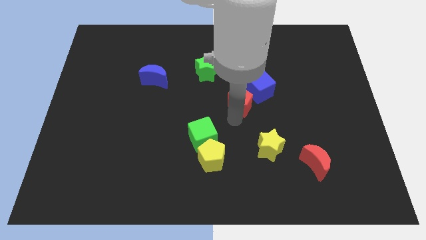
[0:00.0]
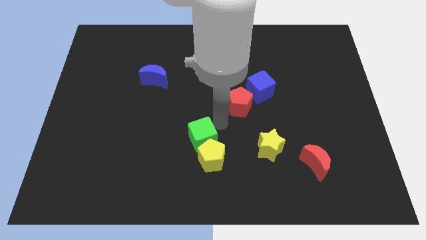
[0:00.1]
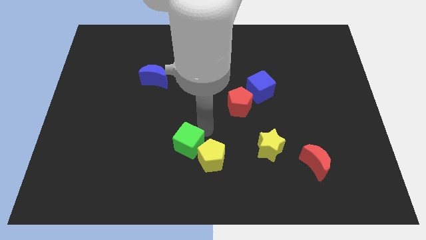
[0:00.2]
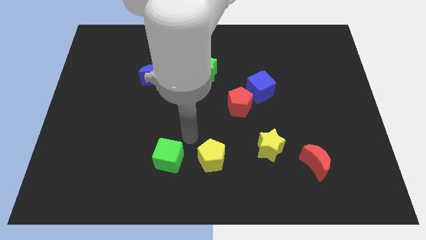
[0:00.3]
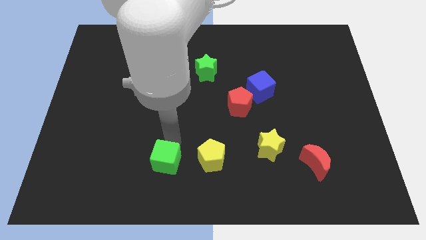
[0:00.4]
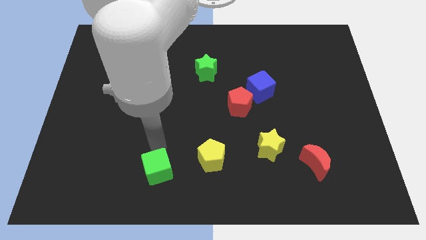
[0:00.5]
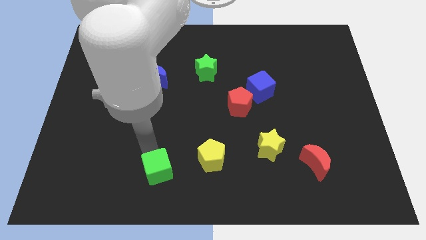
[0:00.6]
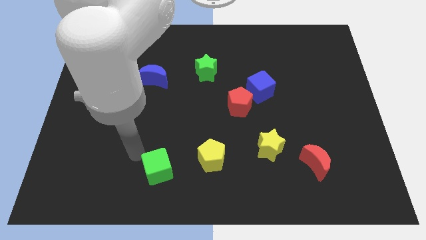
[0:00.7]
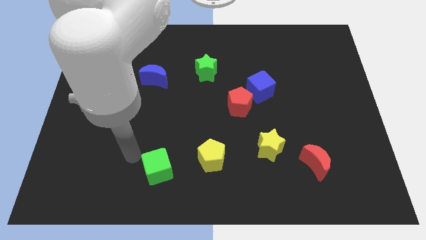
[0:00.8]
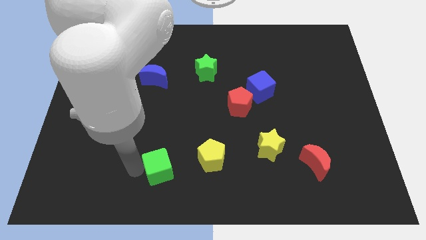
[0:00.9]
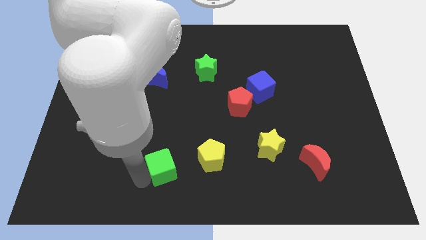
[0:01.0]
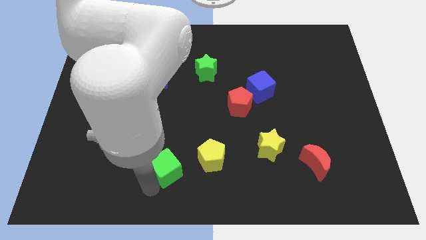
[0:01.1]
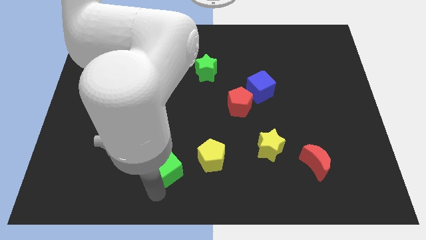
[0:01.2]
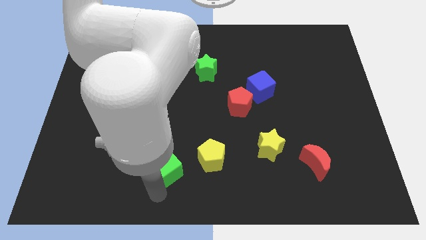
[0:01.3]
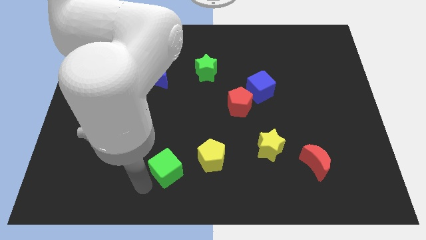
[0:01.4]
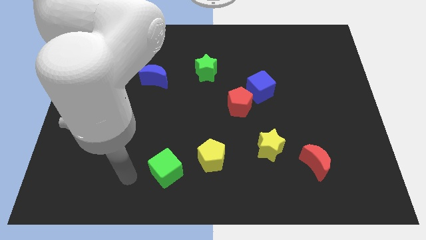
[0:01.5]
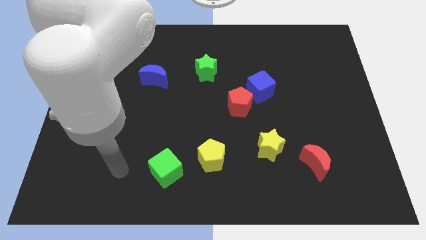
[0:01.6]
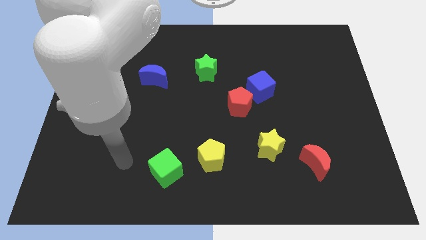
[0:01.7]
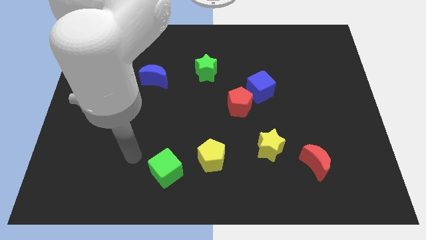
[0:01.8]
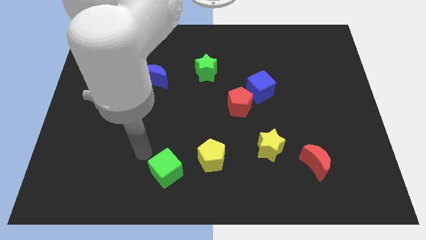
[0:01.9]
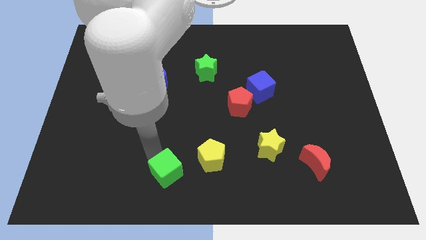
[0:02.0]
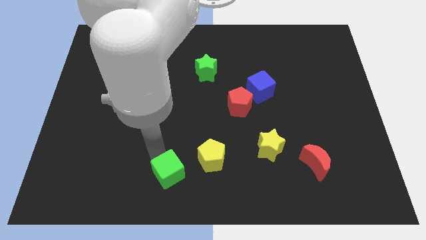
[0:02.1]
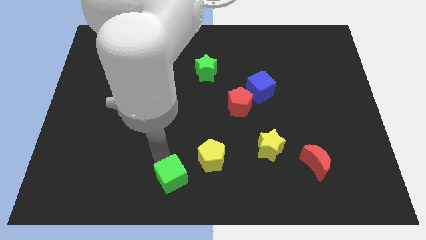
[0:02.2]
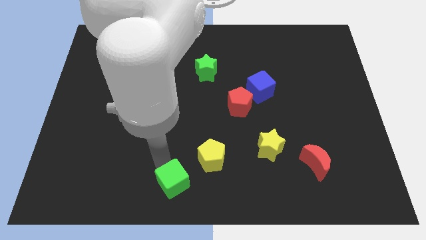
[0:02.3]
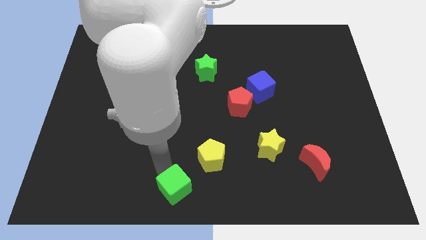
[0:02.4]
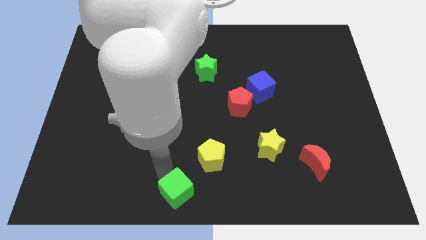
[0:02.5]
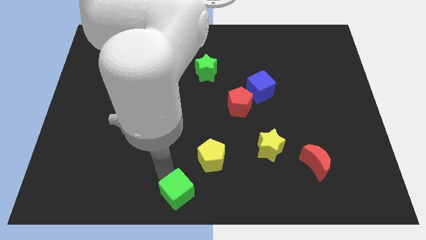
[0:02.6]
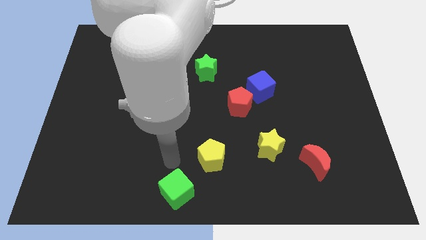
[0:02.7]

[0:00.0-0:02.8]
push the green cube to the bottom center

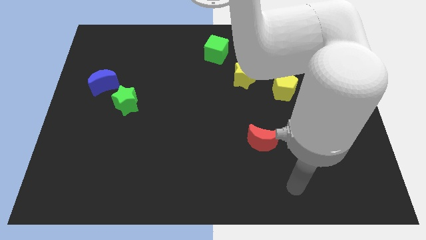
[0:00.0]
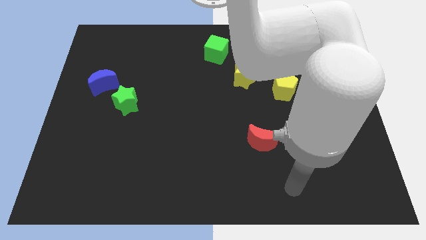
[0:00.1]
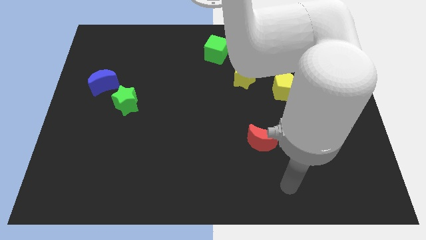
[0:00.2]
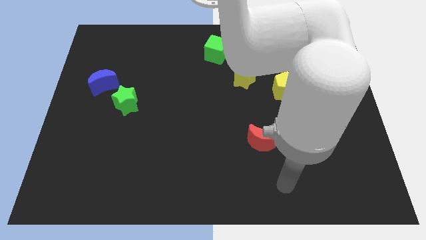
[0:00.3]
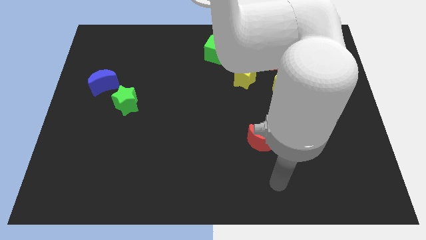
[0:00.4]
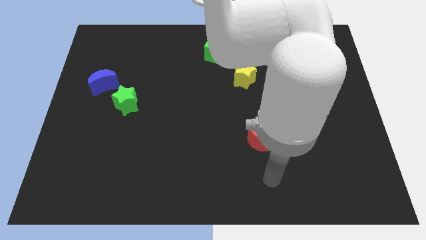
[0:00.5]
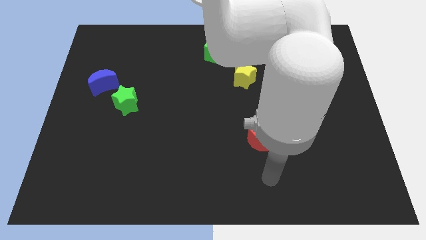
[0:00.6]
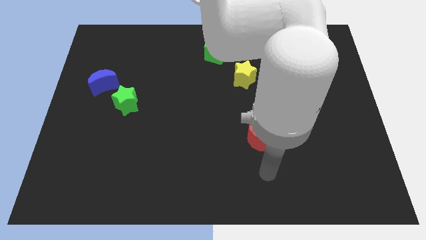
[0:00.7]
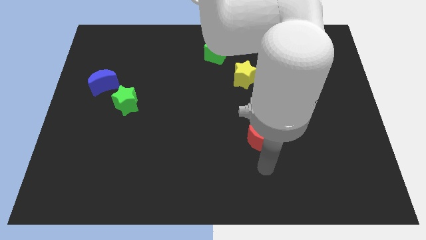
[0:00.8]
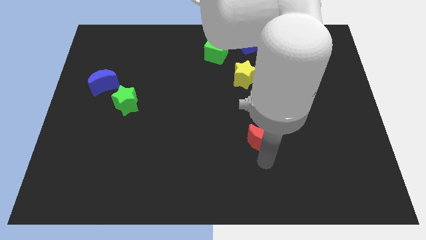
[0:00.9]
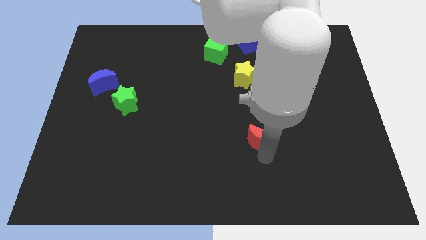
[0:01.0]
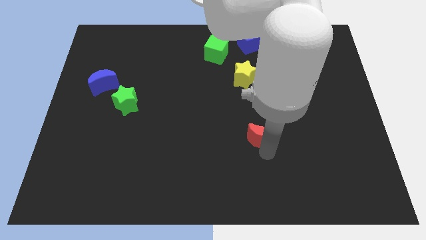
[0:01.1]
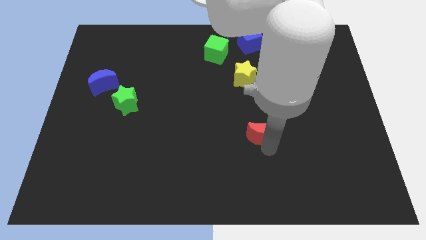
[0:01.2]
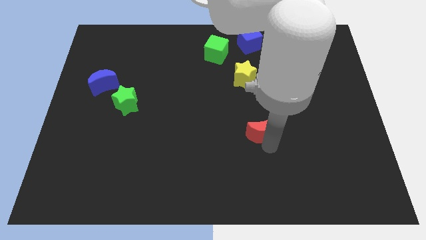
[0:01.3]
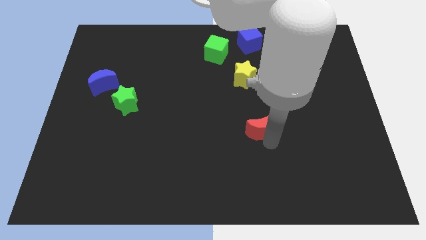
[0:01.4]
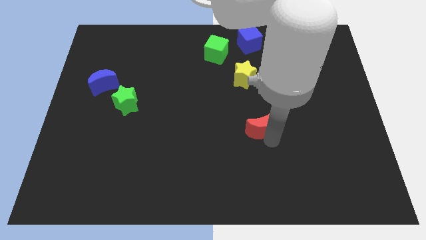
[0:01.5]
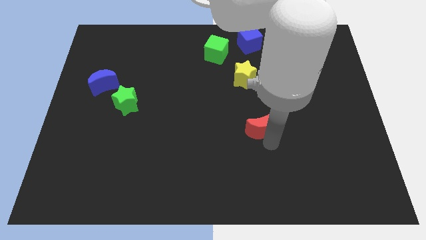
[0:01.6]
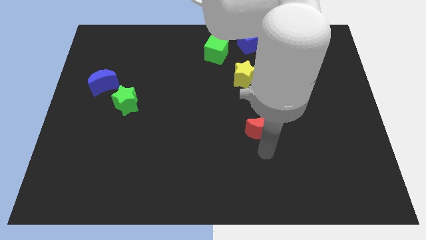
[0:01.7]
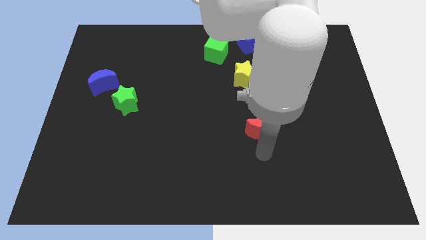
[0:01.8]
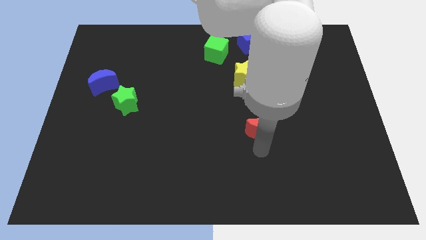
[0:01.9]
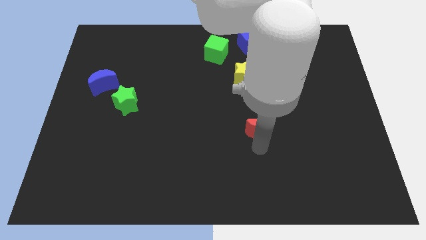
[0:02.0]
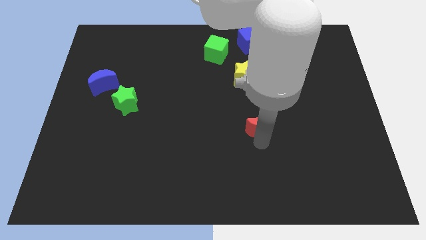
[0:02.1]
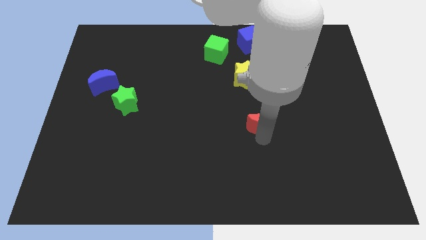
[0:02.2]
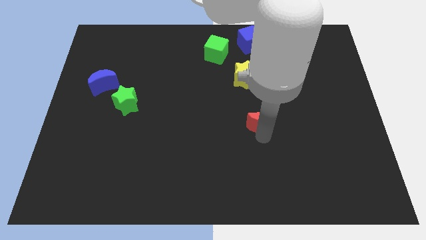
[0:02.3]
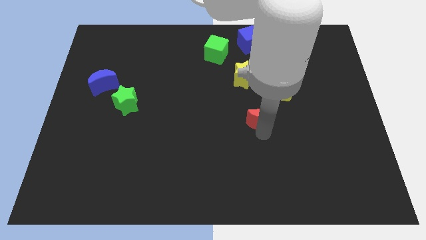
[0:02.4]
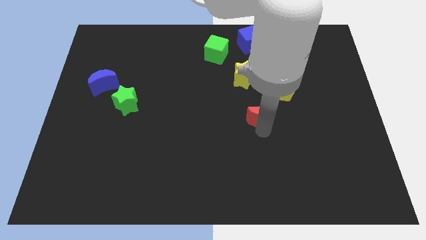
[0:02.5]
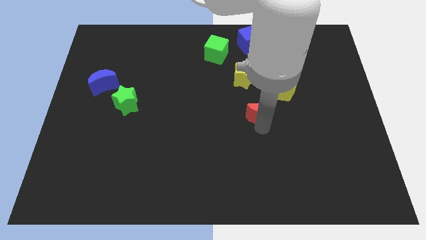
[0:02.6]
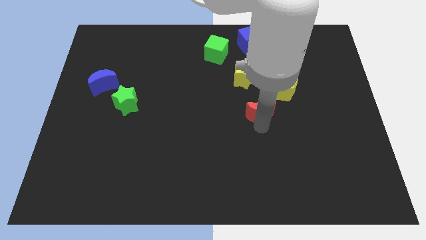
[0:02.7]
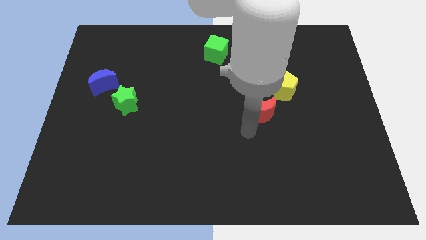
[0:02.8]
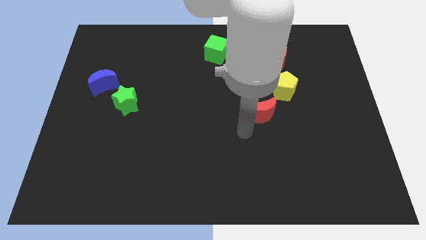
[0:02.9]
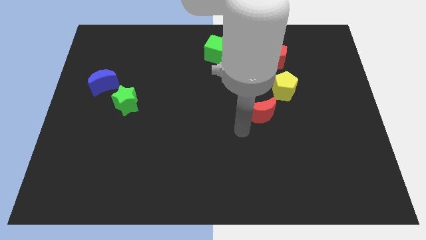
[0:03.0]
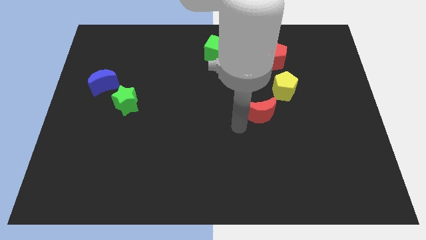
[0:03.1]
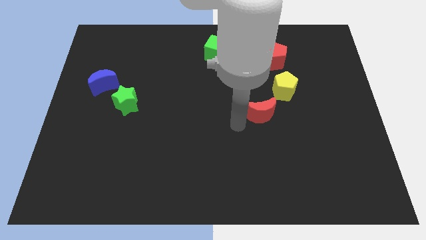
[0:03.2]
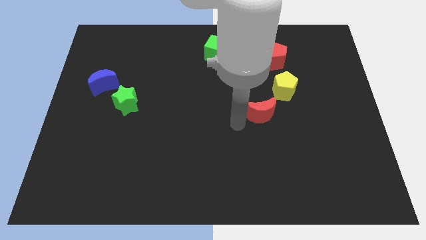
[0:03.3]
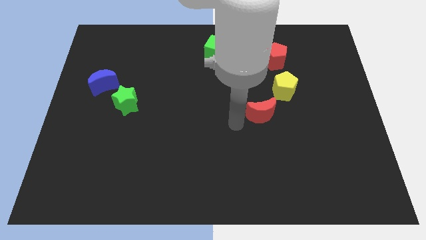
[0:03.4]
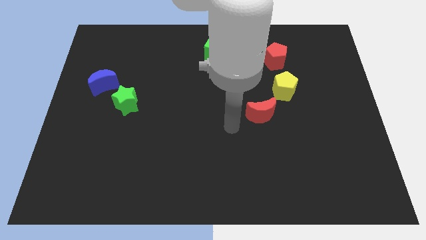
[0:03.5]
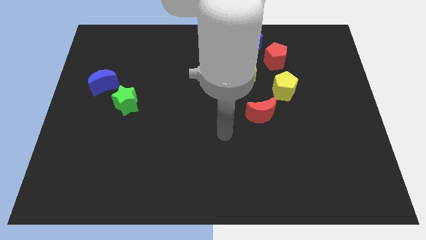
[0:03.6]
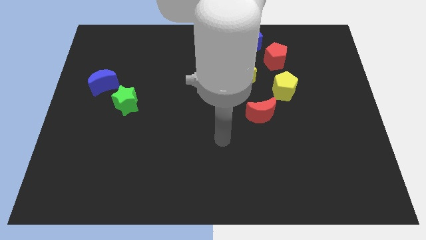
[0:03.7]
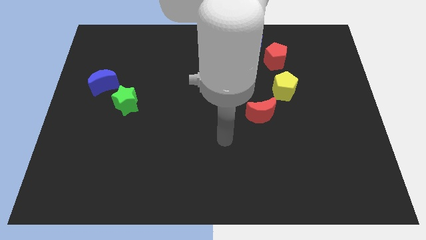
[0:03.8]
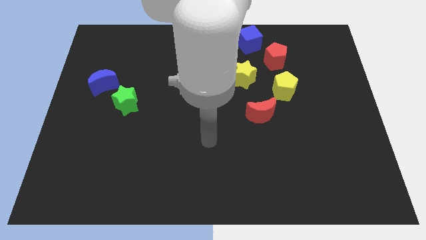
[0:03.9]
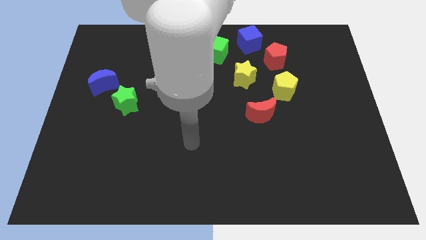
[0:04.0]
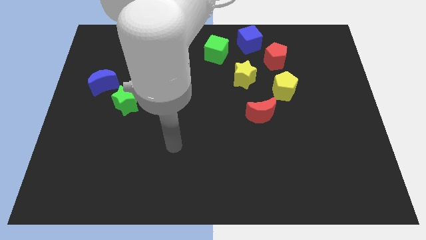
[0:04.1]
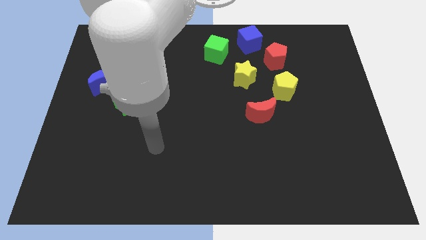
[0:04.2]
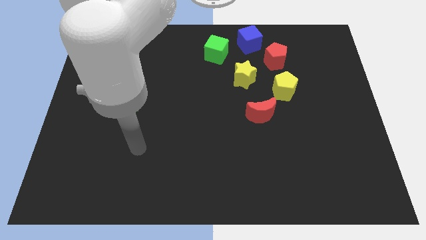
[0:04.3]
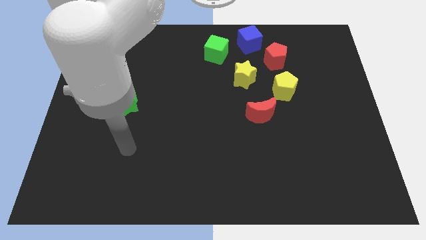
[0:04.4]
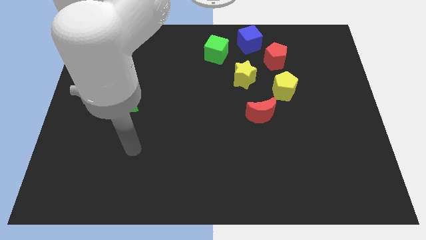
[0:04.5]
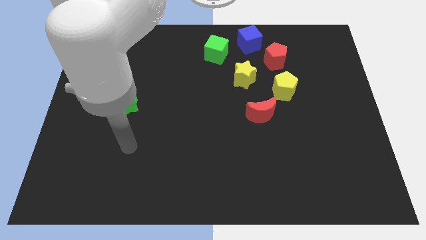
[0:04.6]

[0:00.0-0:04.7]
move the red crescent to the bottom left of the yellow pentagon

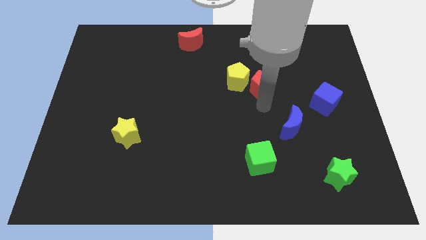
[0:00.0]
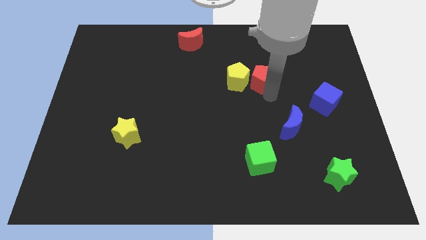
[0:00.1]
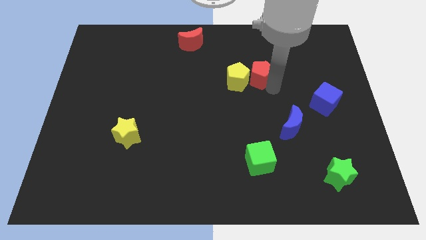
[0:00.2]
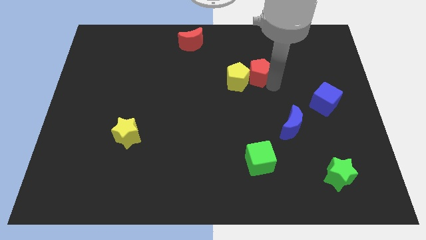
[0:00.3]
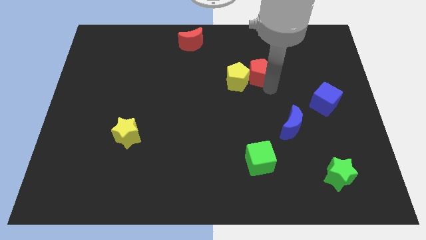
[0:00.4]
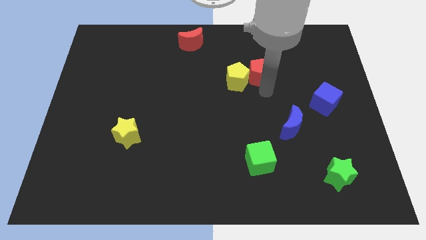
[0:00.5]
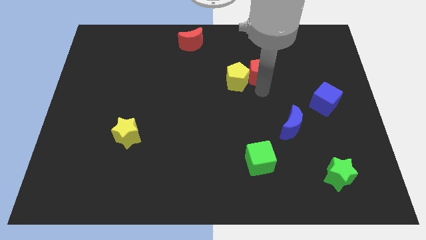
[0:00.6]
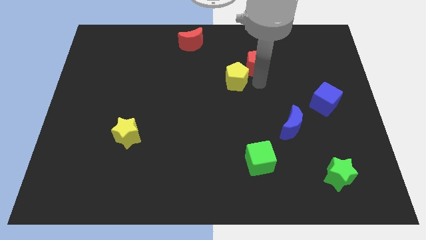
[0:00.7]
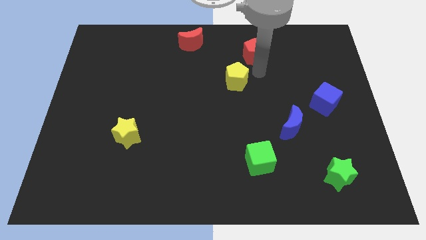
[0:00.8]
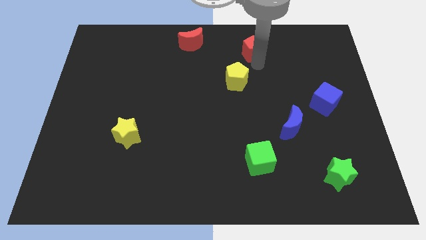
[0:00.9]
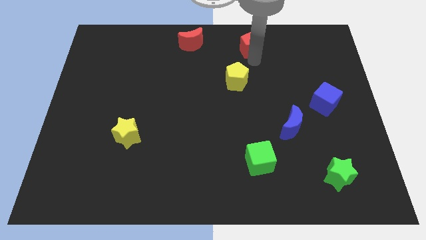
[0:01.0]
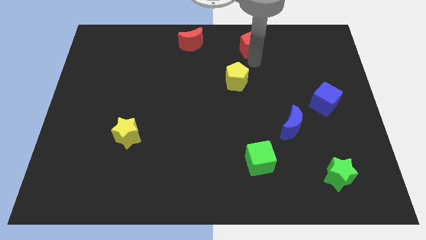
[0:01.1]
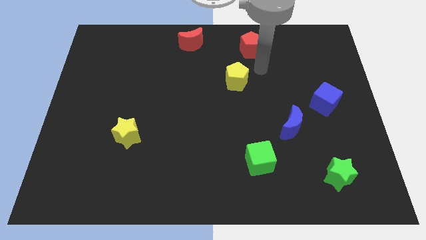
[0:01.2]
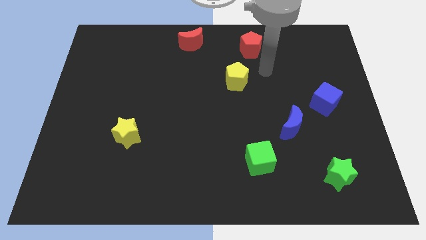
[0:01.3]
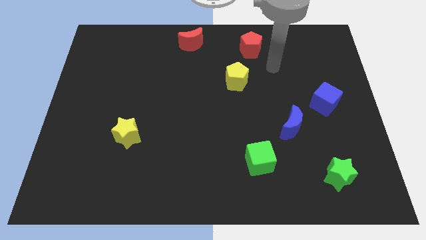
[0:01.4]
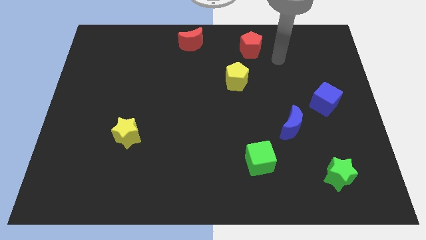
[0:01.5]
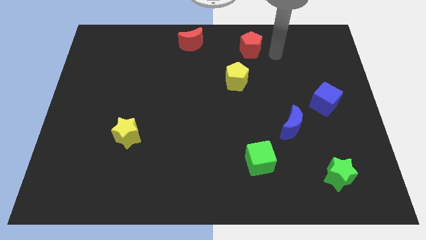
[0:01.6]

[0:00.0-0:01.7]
move red pentagon to the right of the red moon
